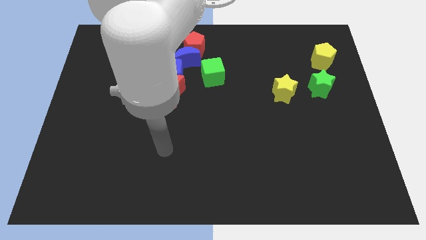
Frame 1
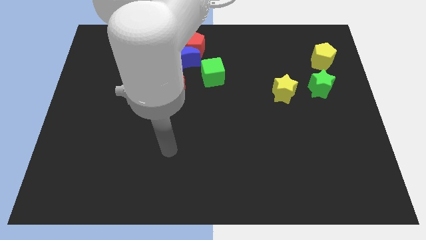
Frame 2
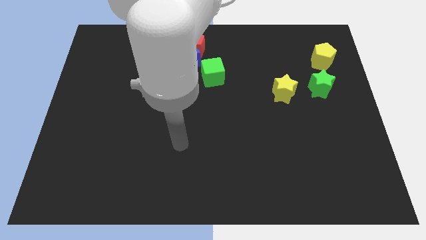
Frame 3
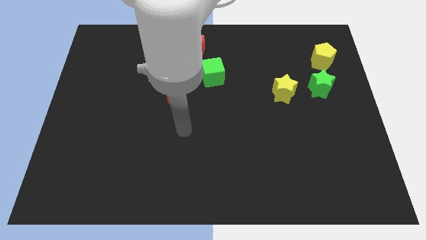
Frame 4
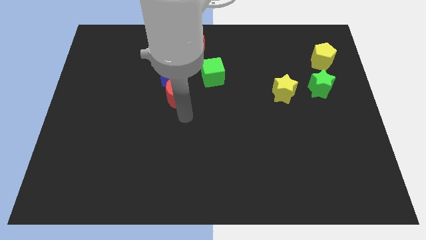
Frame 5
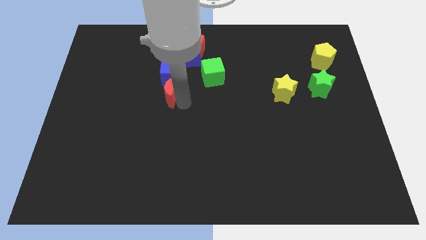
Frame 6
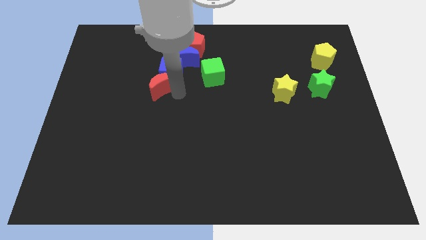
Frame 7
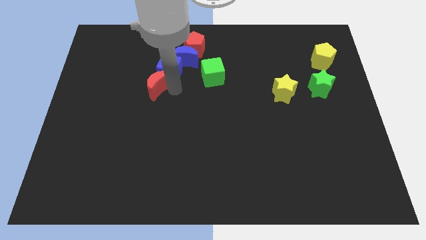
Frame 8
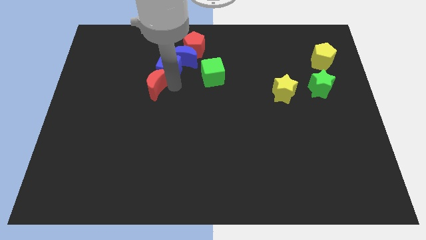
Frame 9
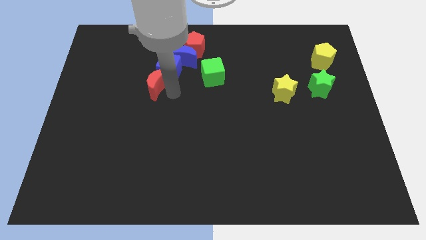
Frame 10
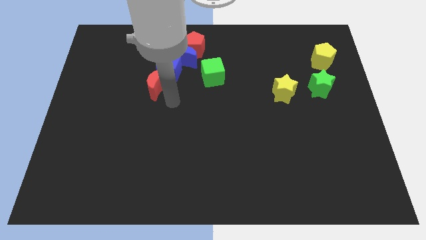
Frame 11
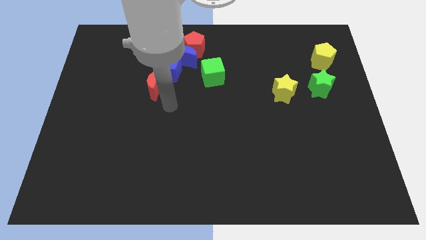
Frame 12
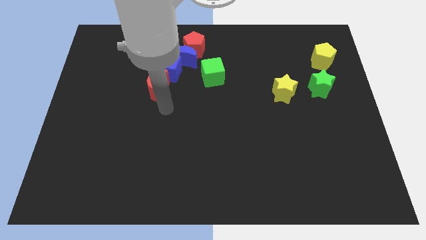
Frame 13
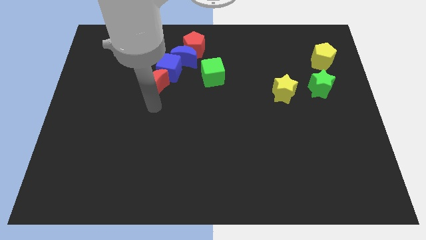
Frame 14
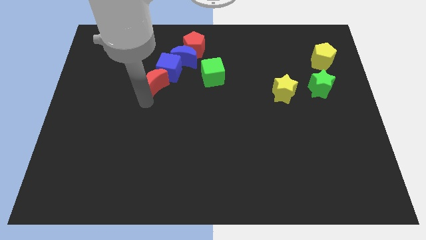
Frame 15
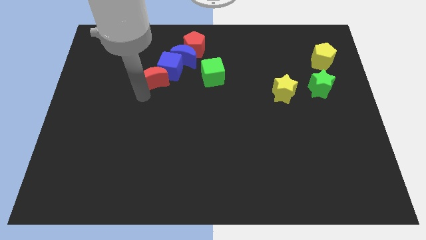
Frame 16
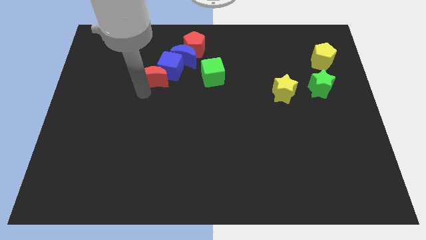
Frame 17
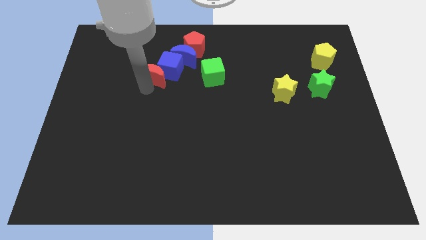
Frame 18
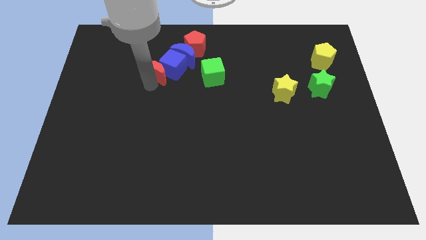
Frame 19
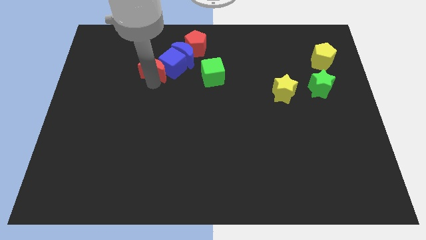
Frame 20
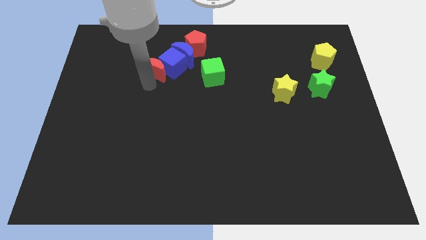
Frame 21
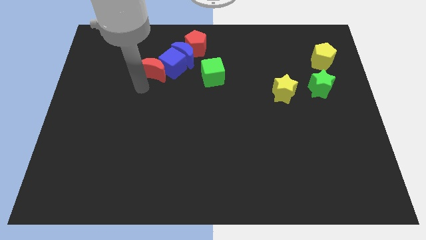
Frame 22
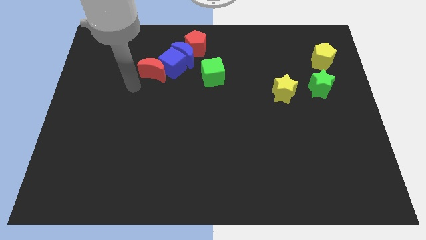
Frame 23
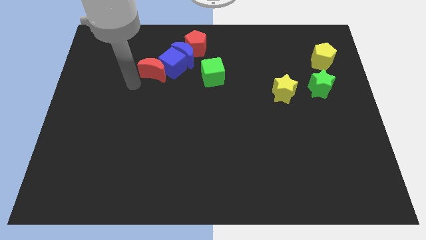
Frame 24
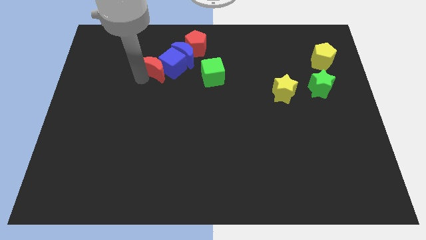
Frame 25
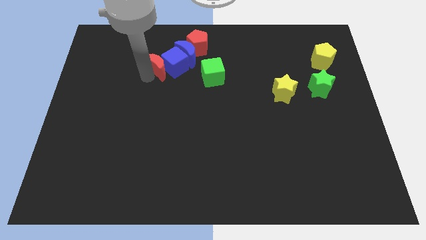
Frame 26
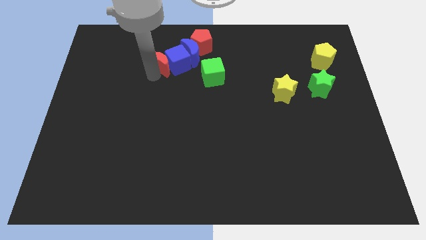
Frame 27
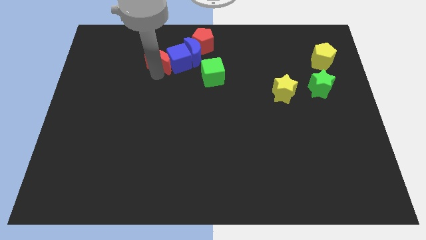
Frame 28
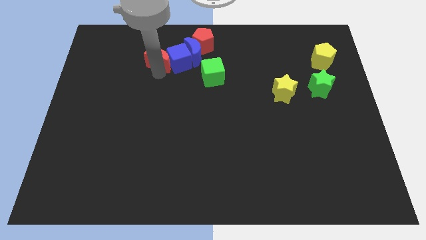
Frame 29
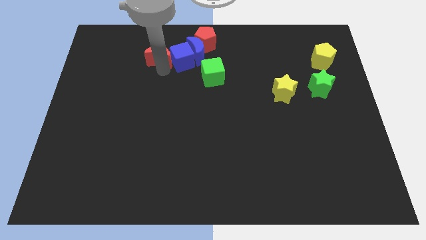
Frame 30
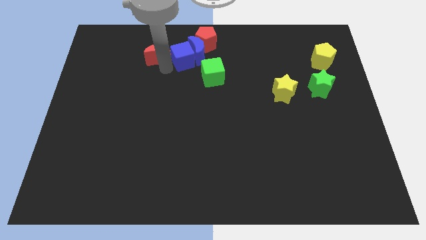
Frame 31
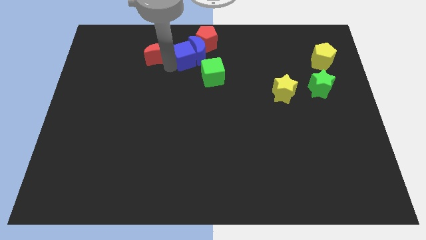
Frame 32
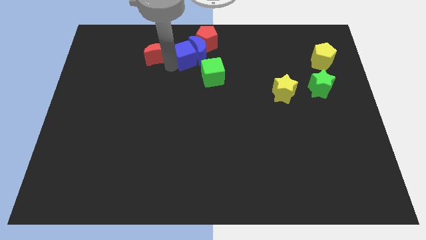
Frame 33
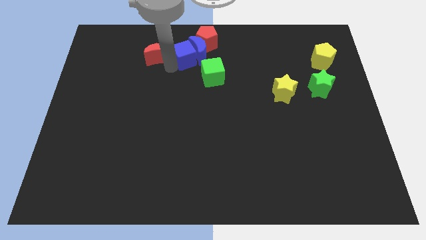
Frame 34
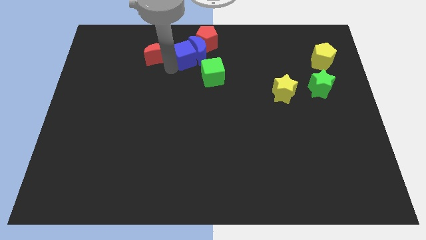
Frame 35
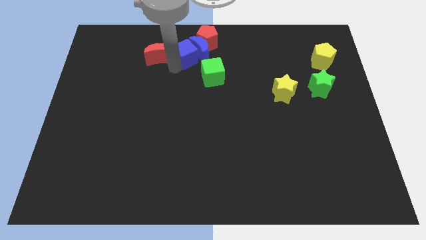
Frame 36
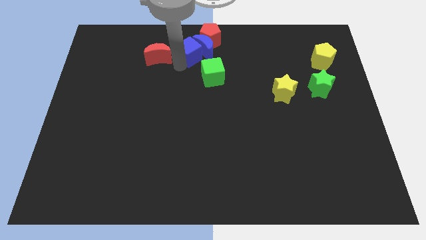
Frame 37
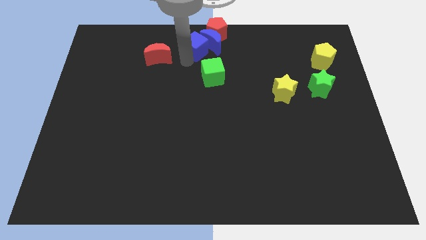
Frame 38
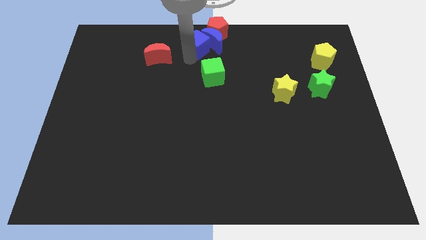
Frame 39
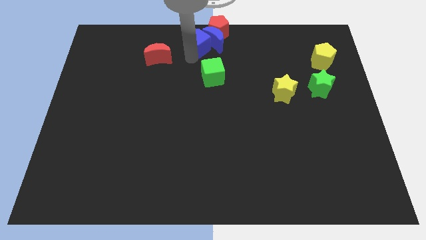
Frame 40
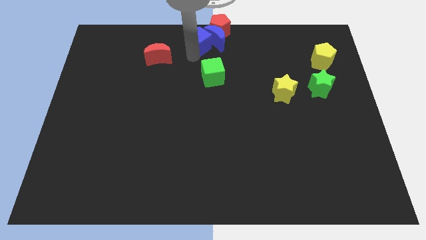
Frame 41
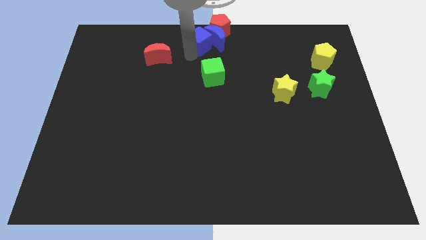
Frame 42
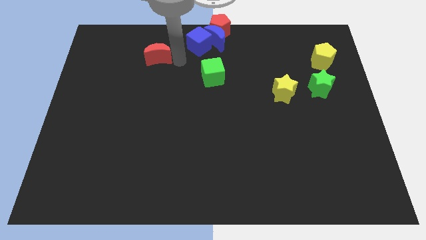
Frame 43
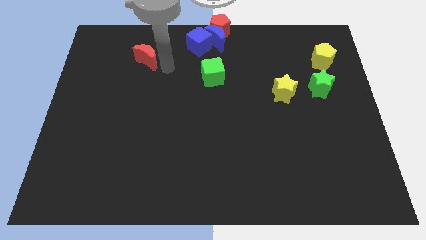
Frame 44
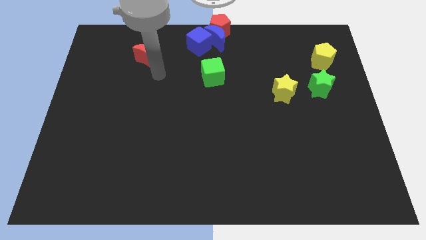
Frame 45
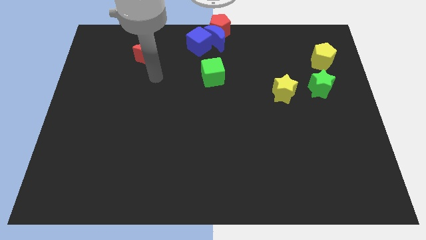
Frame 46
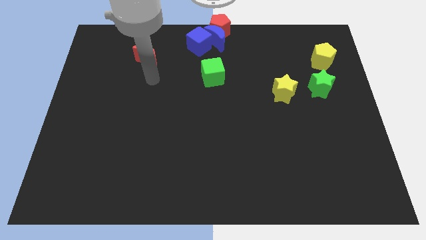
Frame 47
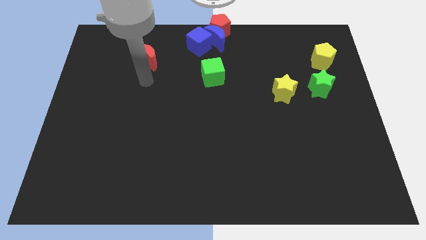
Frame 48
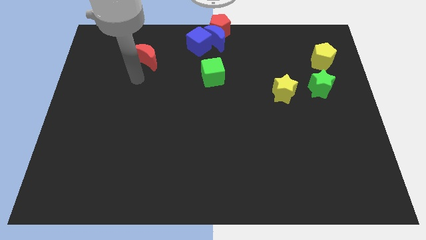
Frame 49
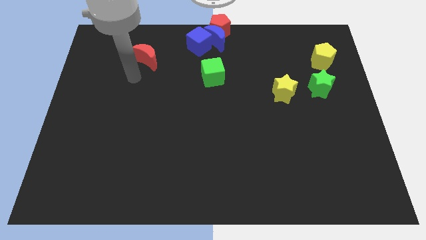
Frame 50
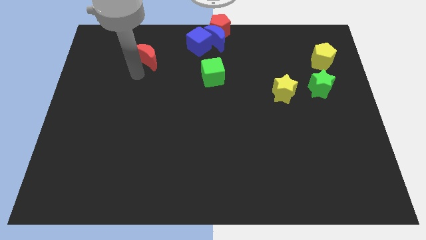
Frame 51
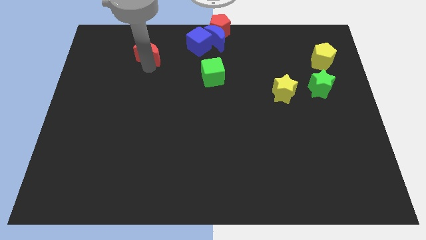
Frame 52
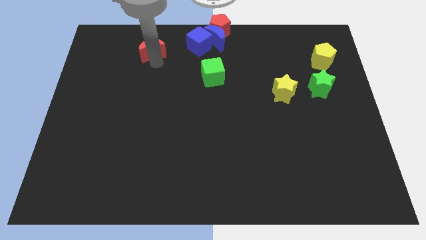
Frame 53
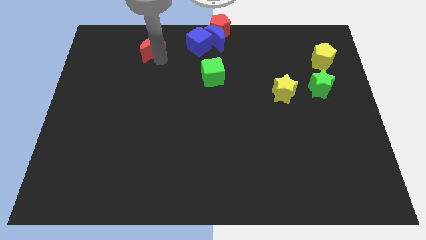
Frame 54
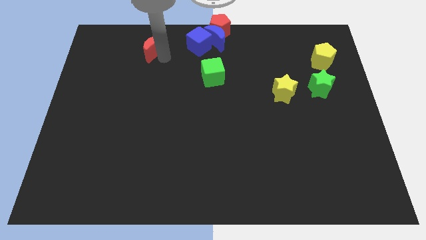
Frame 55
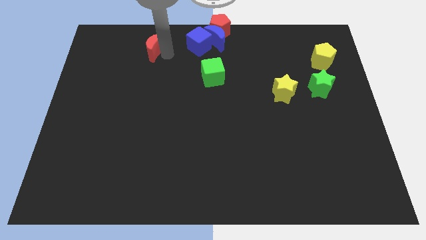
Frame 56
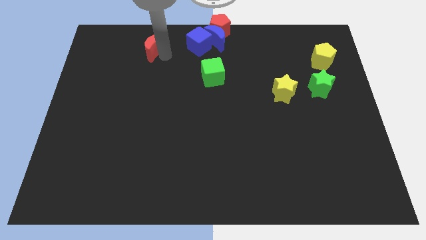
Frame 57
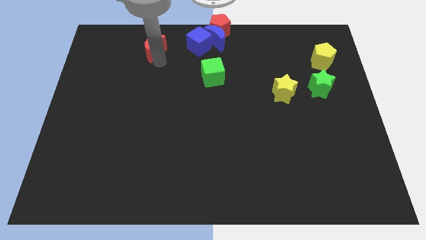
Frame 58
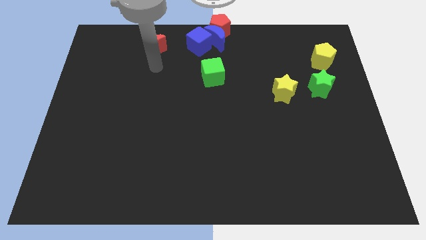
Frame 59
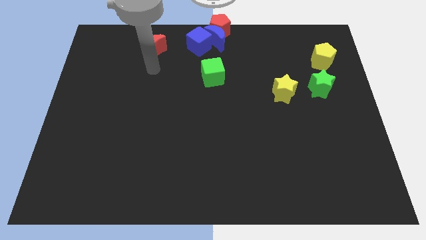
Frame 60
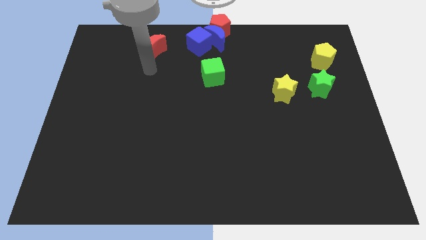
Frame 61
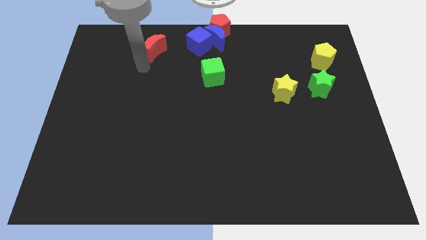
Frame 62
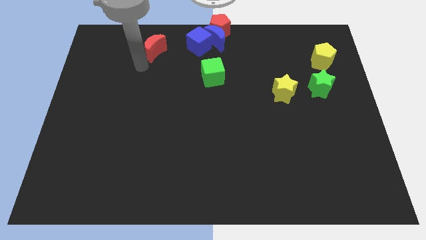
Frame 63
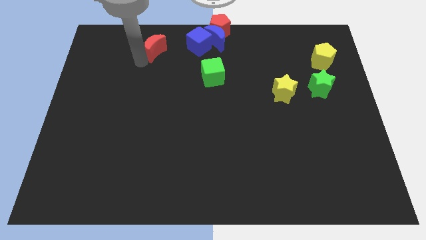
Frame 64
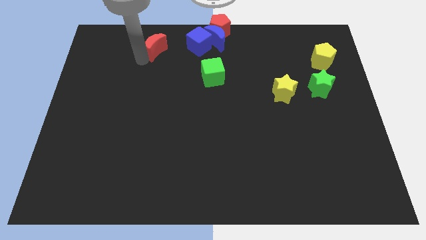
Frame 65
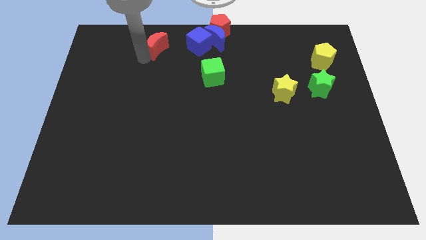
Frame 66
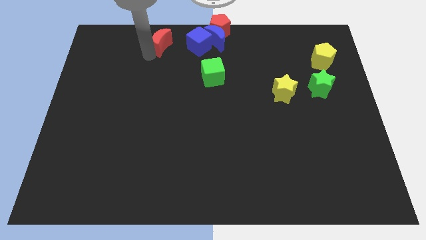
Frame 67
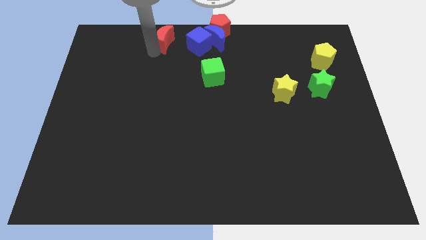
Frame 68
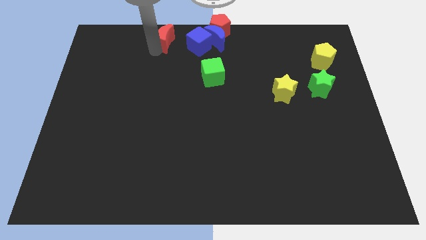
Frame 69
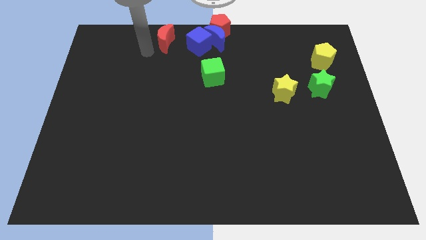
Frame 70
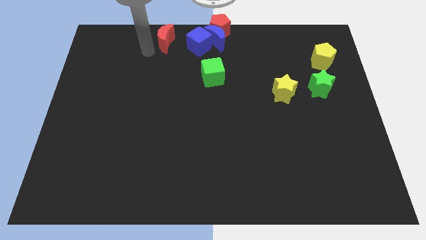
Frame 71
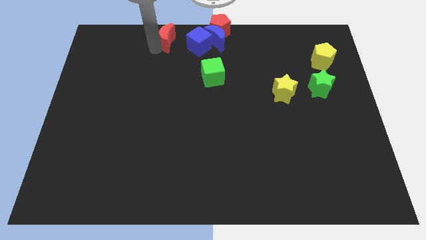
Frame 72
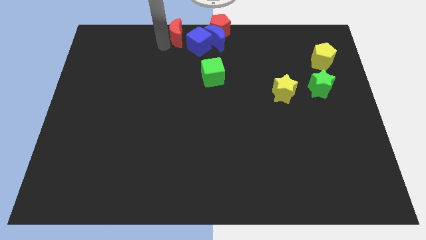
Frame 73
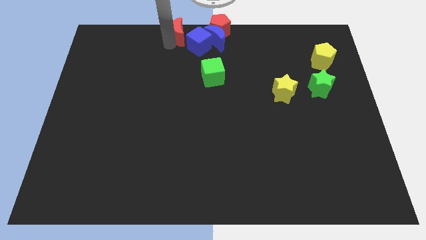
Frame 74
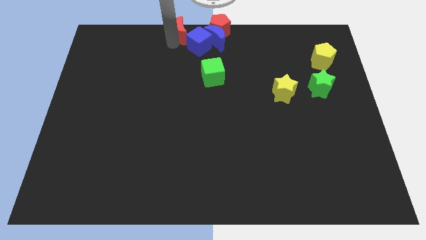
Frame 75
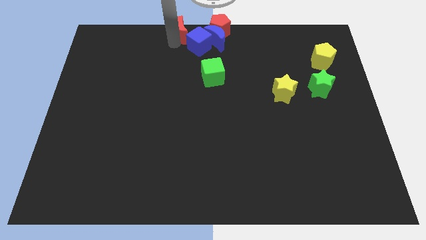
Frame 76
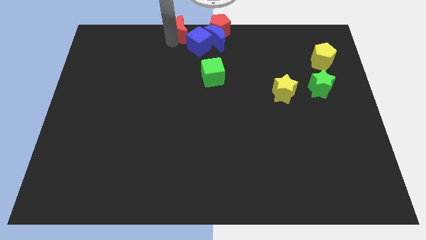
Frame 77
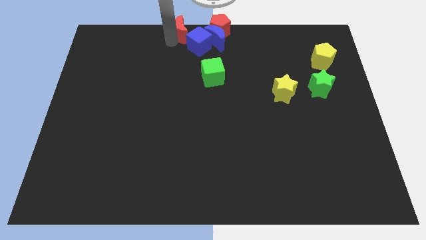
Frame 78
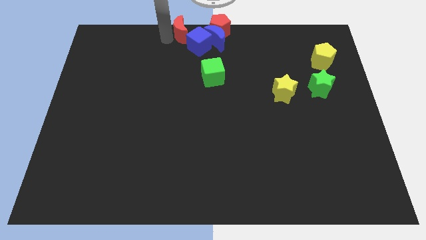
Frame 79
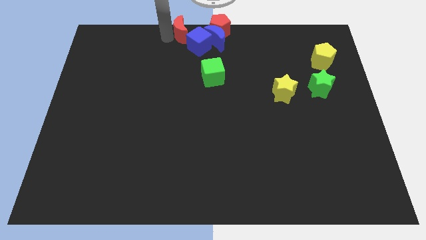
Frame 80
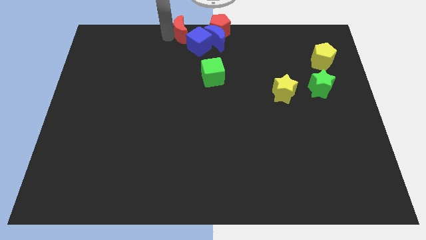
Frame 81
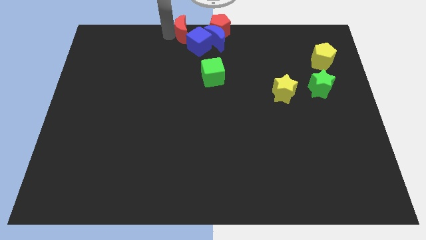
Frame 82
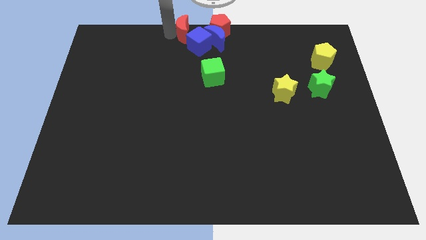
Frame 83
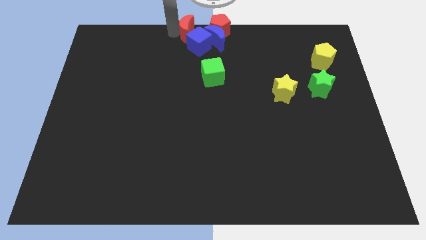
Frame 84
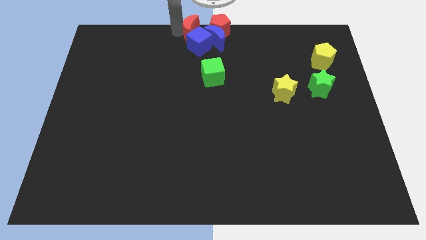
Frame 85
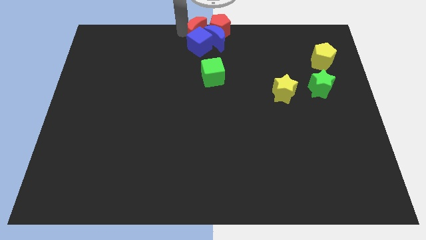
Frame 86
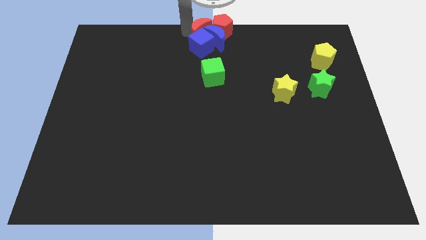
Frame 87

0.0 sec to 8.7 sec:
push a group of blocks towards the top center of the board

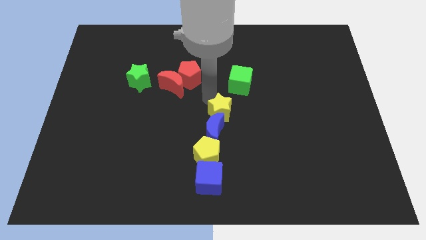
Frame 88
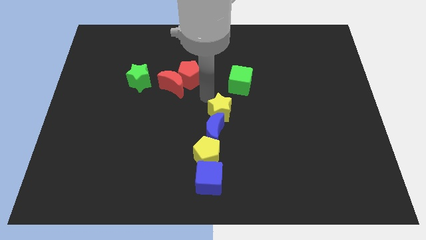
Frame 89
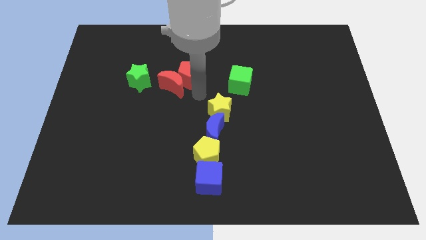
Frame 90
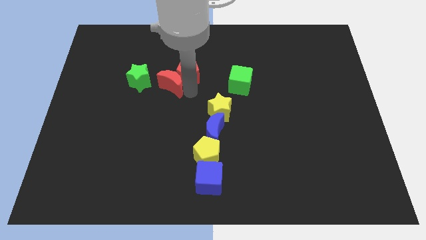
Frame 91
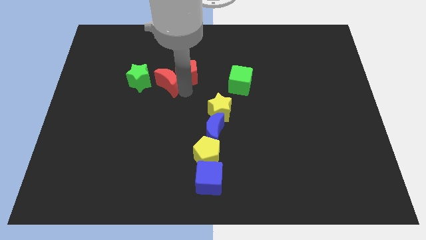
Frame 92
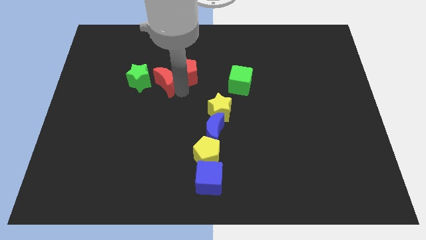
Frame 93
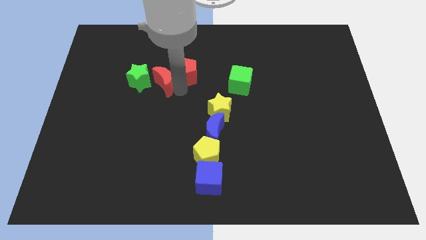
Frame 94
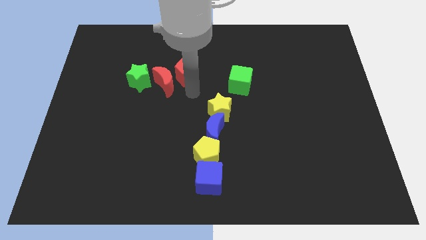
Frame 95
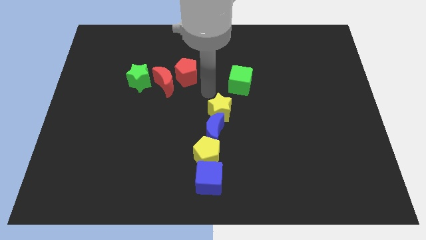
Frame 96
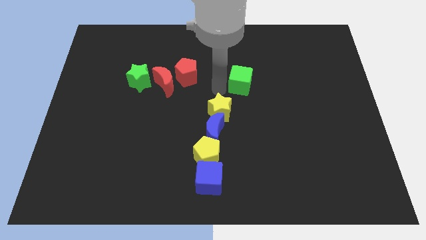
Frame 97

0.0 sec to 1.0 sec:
separate the two red blocks
